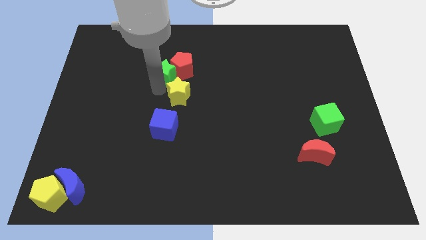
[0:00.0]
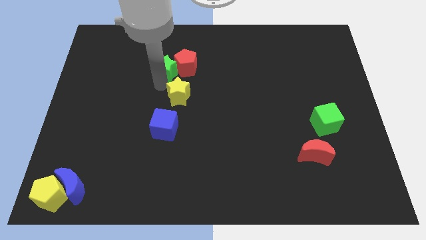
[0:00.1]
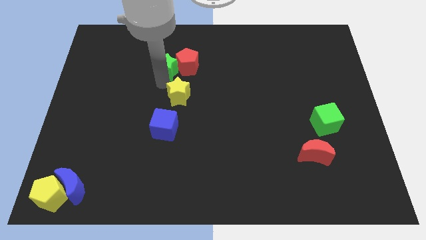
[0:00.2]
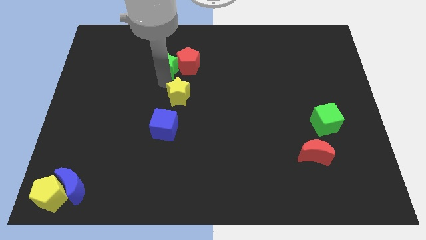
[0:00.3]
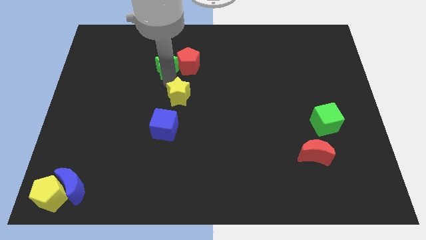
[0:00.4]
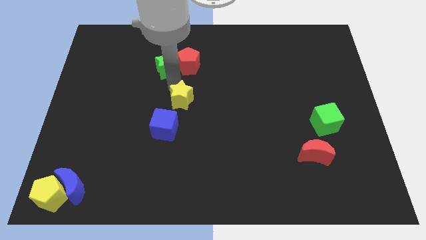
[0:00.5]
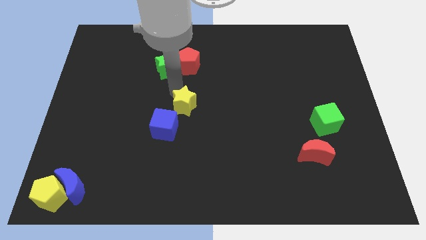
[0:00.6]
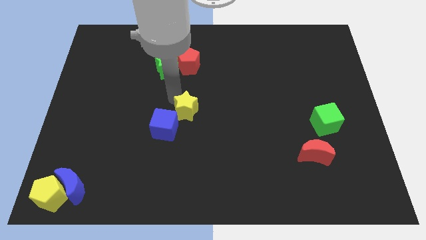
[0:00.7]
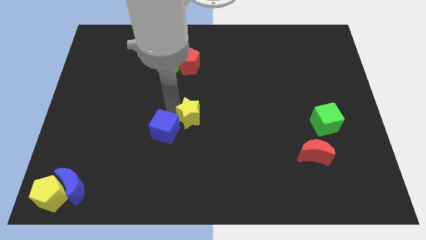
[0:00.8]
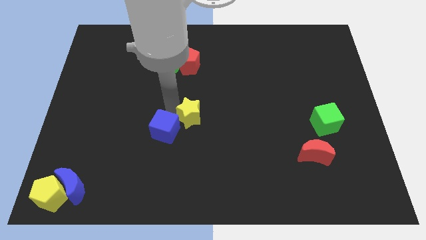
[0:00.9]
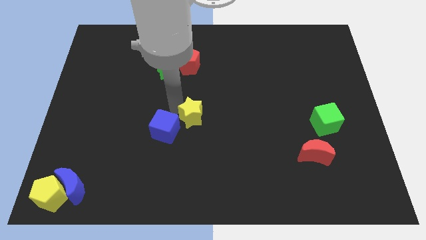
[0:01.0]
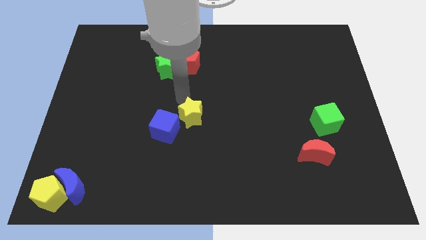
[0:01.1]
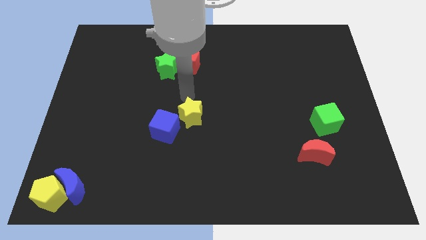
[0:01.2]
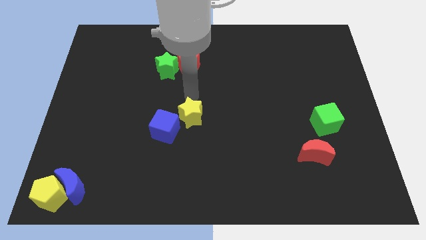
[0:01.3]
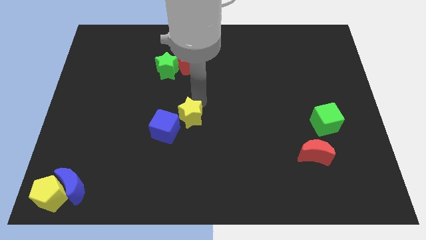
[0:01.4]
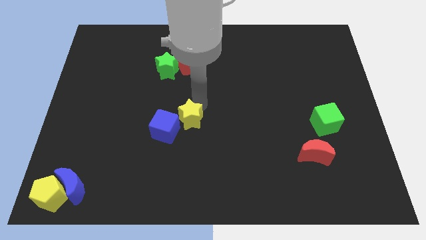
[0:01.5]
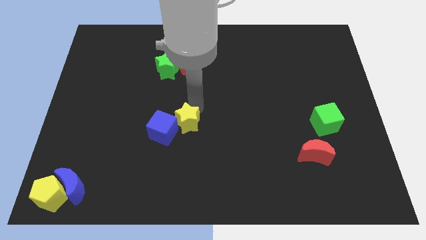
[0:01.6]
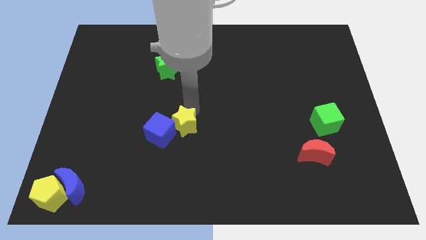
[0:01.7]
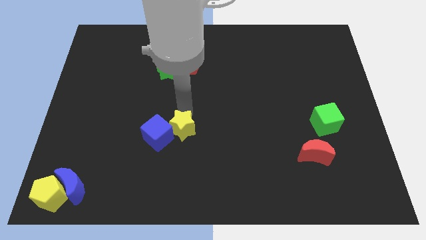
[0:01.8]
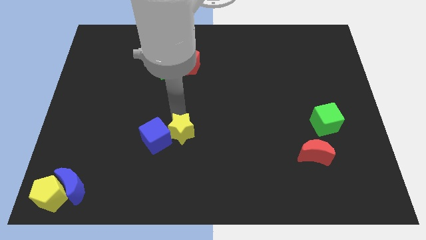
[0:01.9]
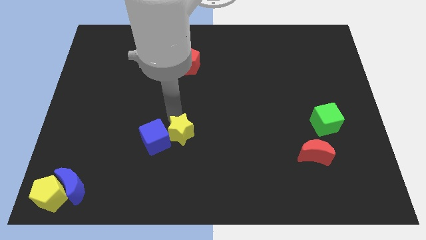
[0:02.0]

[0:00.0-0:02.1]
push the yellow star into the blue cube

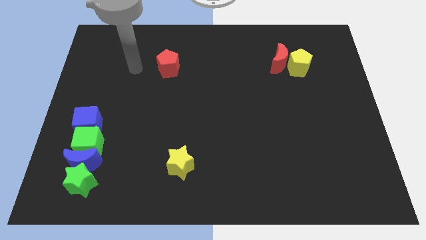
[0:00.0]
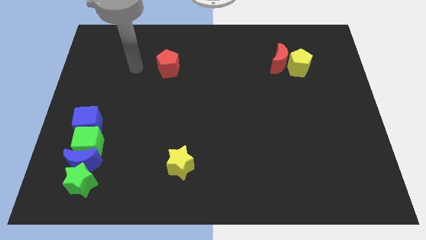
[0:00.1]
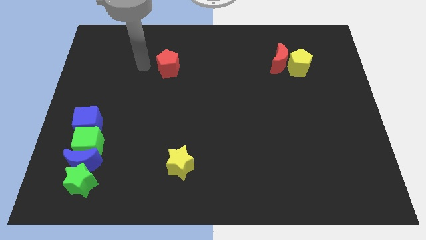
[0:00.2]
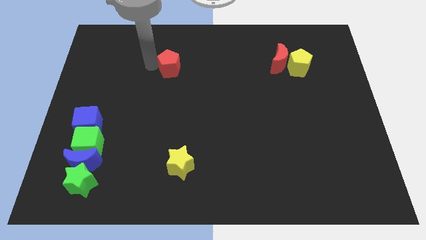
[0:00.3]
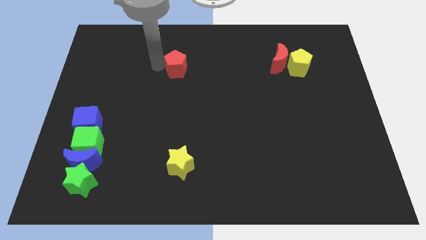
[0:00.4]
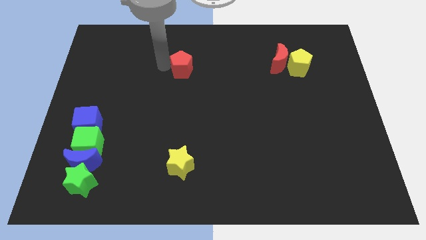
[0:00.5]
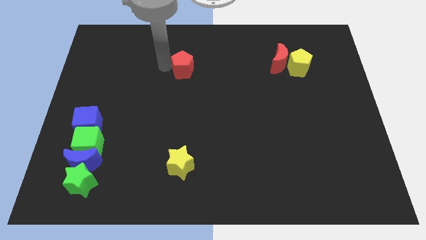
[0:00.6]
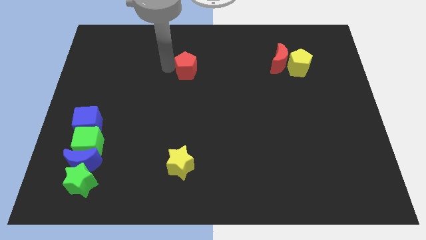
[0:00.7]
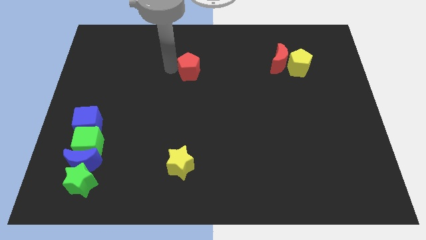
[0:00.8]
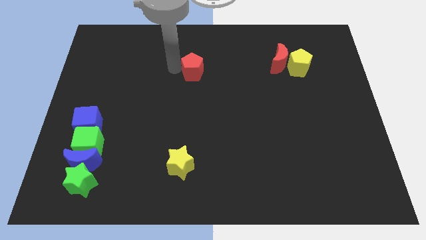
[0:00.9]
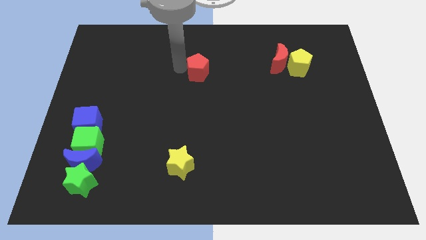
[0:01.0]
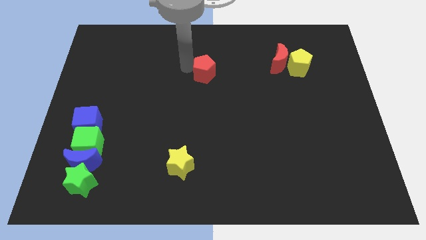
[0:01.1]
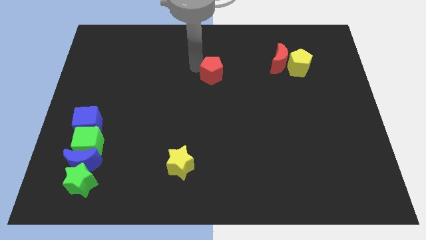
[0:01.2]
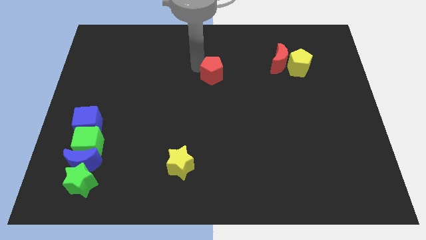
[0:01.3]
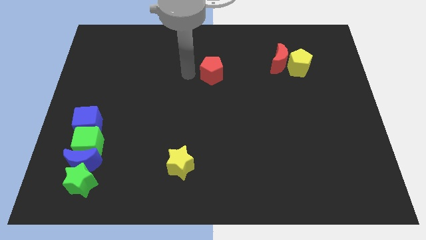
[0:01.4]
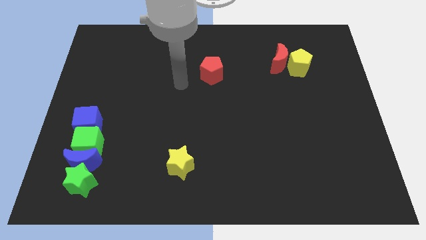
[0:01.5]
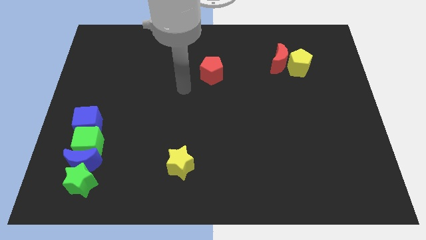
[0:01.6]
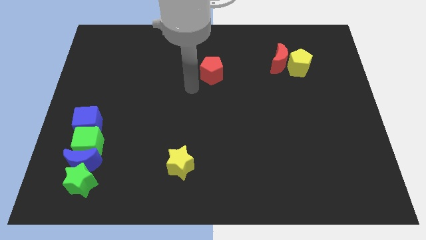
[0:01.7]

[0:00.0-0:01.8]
move the red pentagon towards the right side

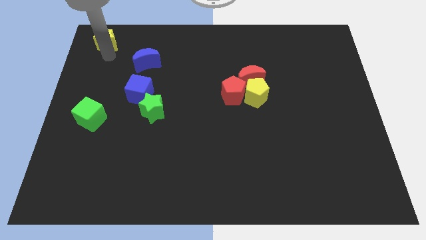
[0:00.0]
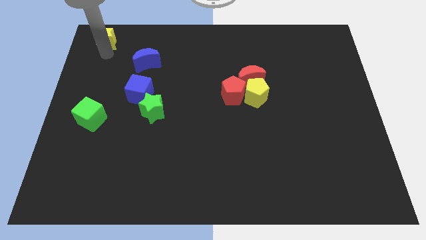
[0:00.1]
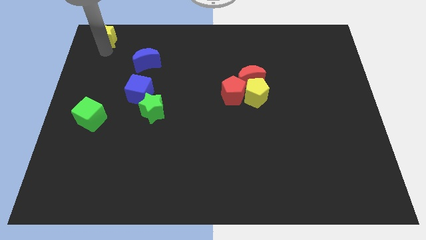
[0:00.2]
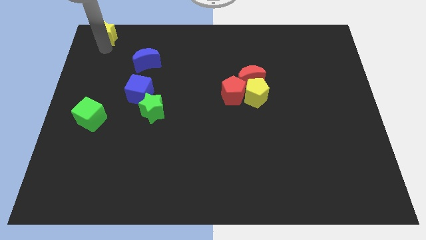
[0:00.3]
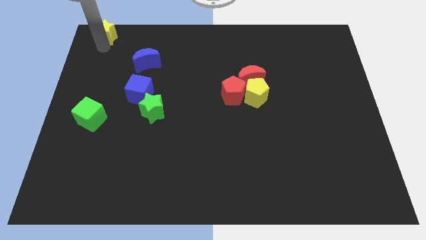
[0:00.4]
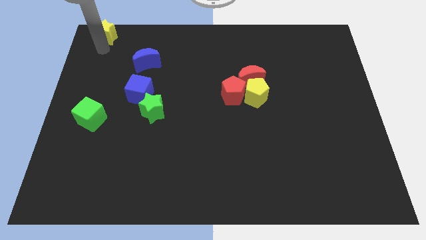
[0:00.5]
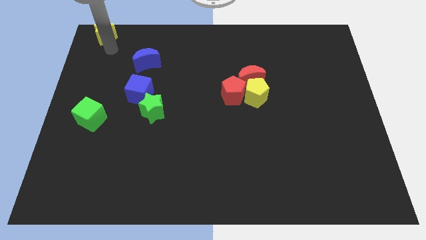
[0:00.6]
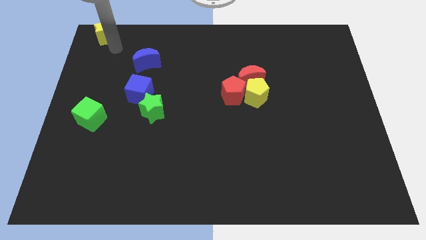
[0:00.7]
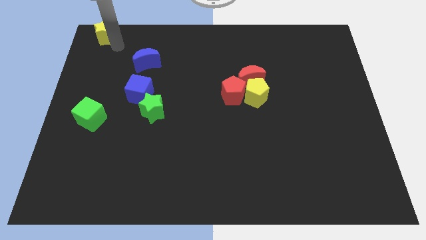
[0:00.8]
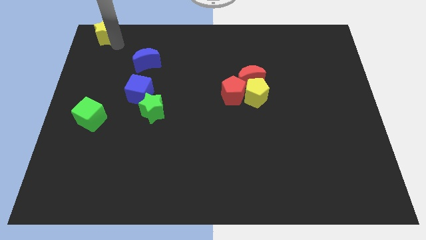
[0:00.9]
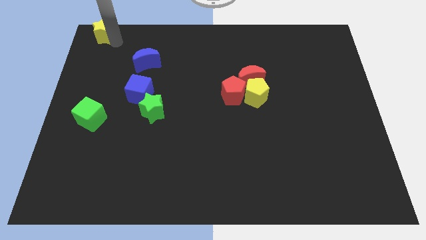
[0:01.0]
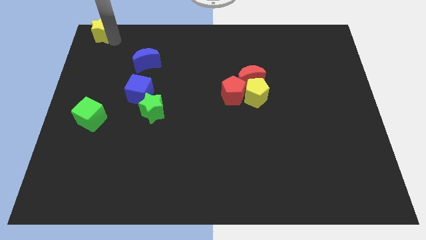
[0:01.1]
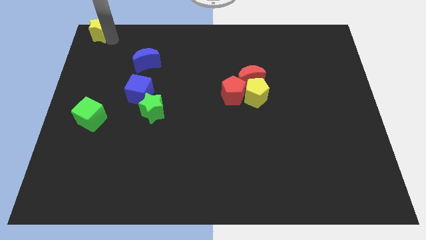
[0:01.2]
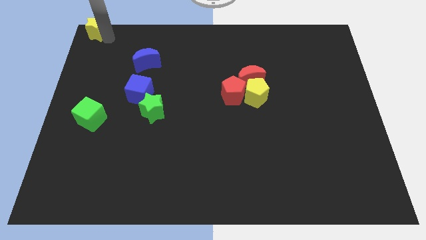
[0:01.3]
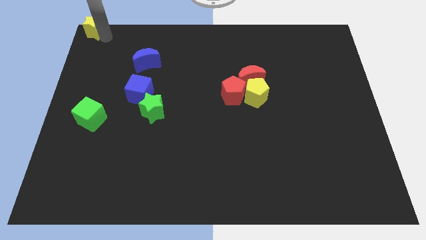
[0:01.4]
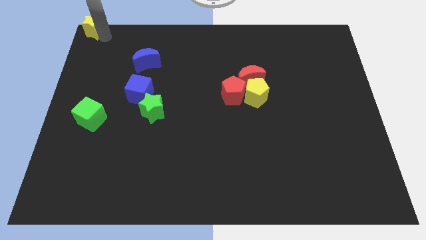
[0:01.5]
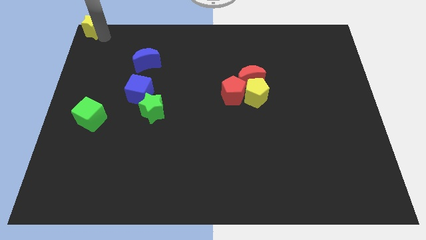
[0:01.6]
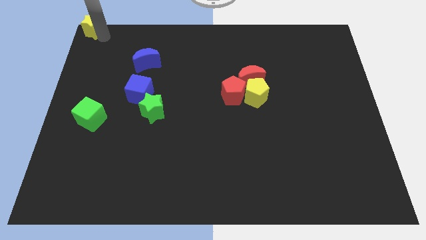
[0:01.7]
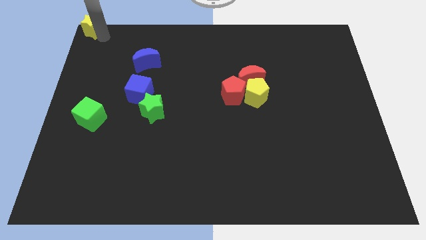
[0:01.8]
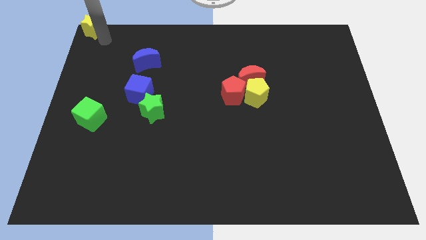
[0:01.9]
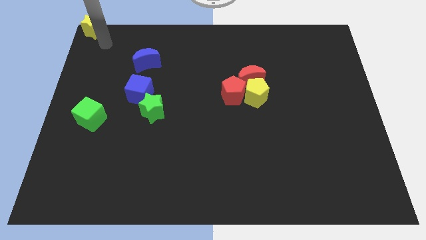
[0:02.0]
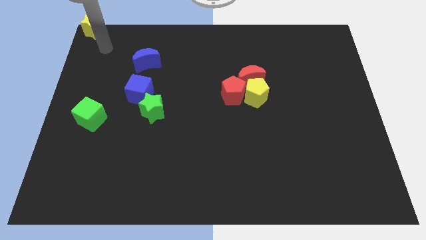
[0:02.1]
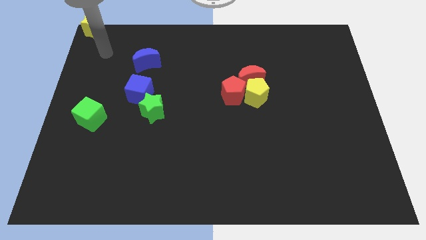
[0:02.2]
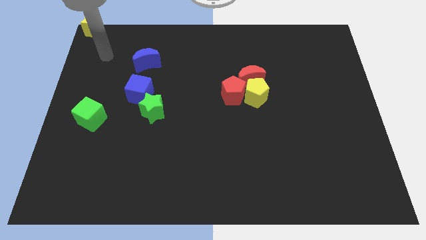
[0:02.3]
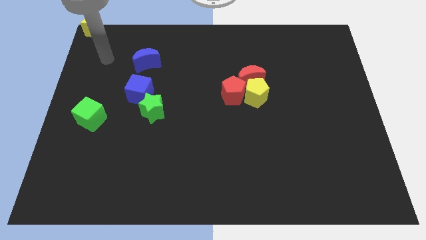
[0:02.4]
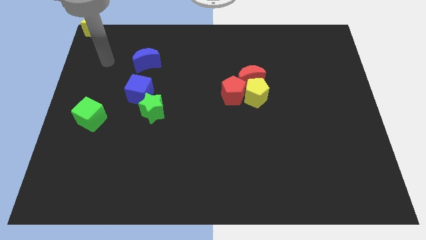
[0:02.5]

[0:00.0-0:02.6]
move the yellow star to the top left

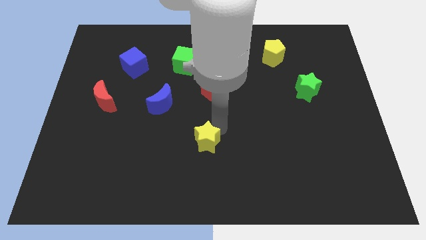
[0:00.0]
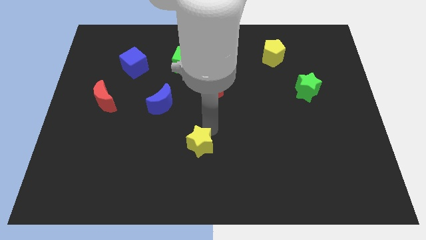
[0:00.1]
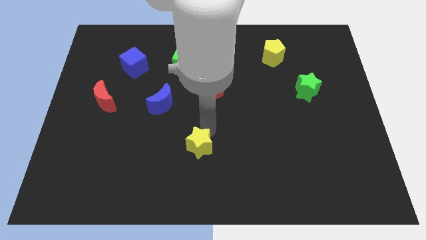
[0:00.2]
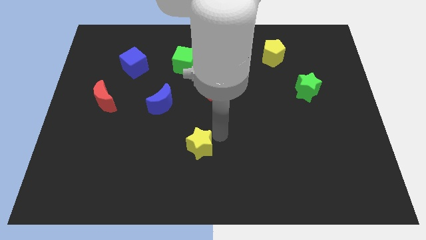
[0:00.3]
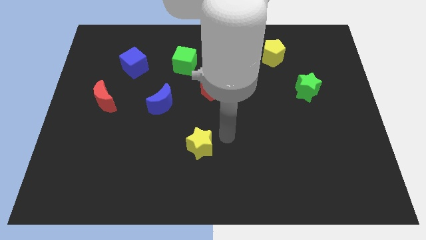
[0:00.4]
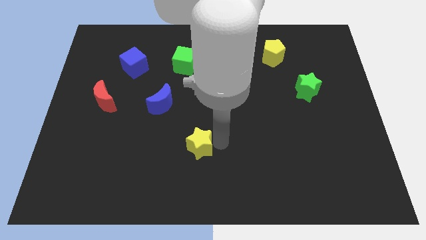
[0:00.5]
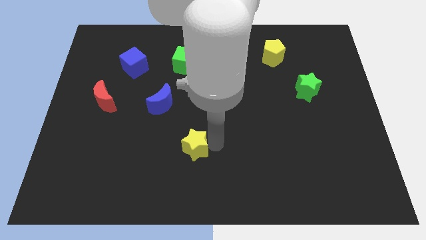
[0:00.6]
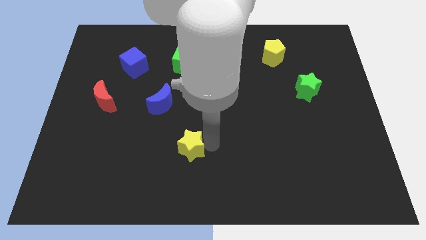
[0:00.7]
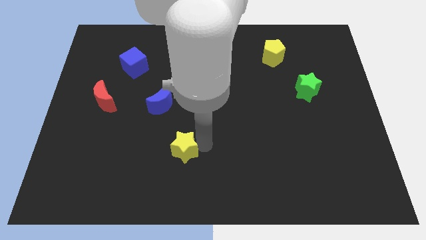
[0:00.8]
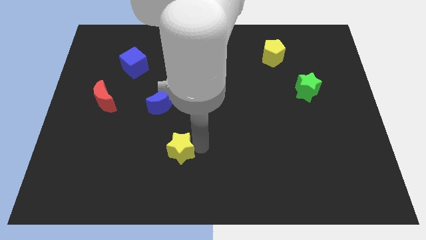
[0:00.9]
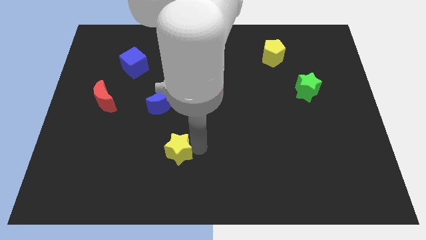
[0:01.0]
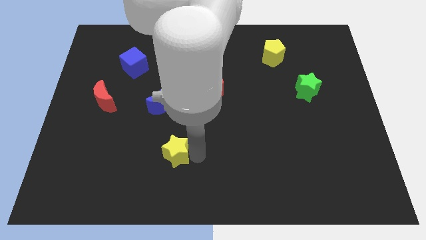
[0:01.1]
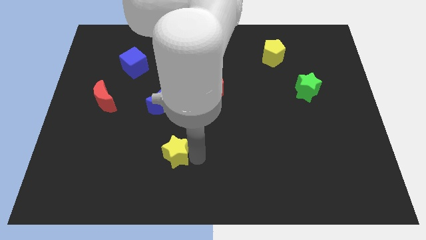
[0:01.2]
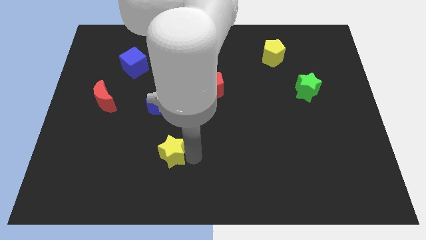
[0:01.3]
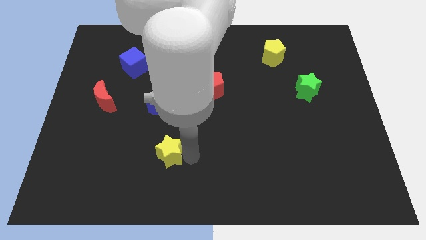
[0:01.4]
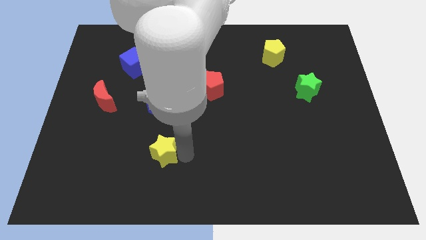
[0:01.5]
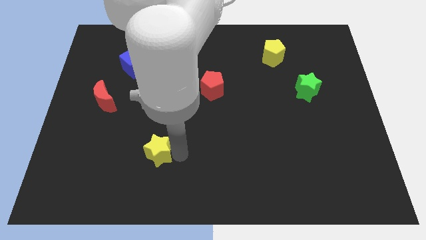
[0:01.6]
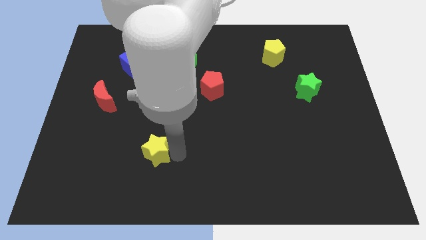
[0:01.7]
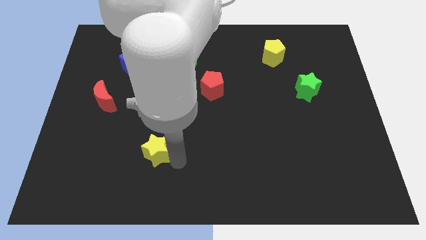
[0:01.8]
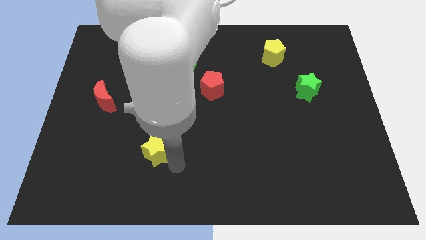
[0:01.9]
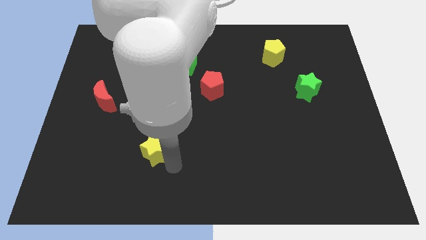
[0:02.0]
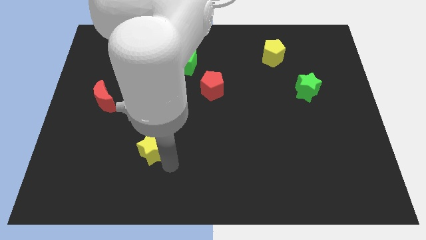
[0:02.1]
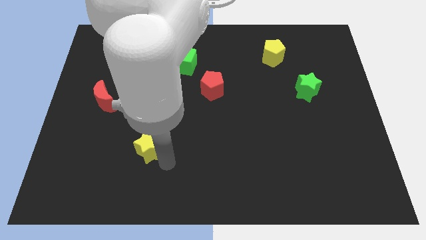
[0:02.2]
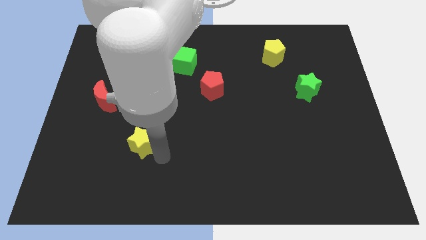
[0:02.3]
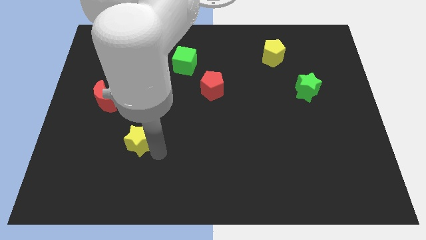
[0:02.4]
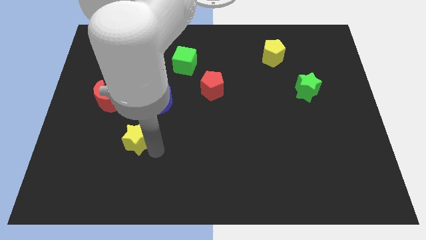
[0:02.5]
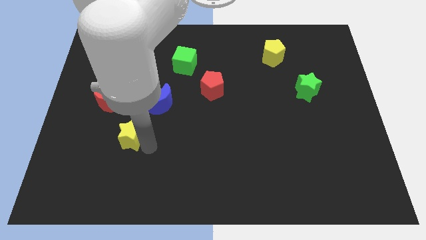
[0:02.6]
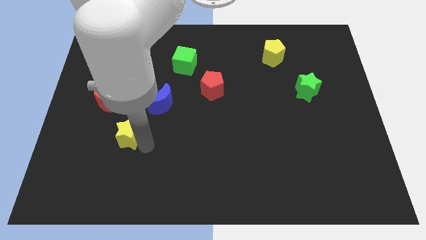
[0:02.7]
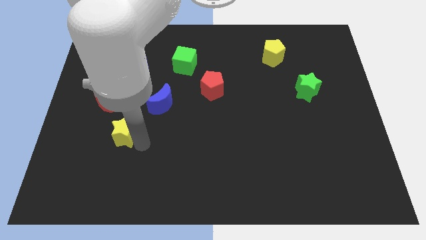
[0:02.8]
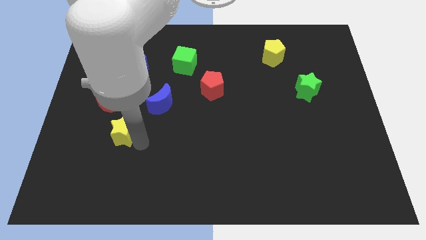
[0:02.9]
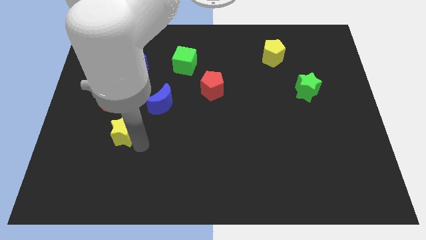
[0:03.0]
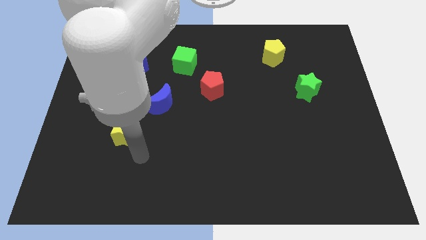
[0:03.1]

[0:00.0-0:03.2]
place the yellow star diagonally to the right of red moon
